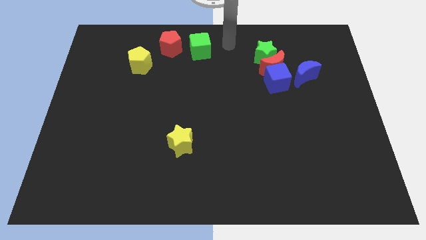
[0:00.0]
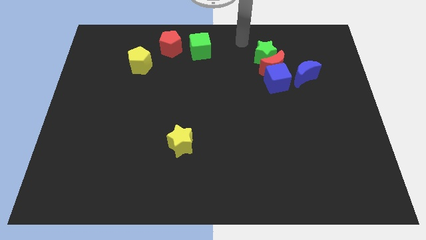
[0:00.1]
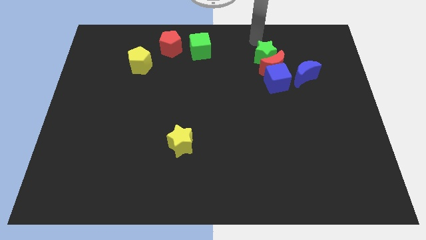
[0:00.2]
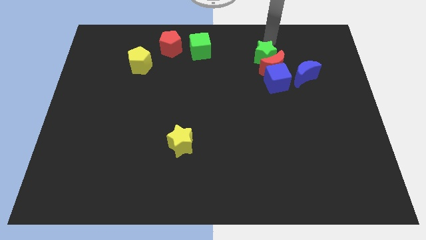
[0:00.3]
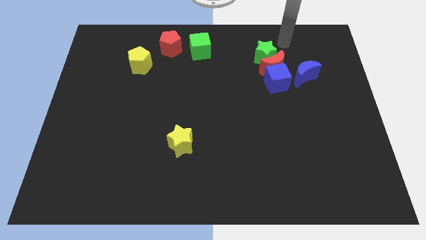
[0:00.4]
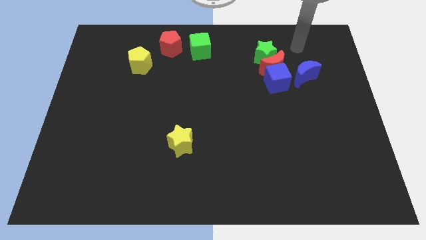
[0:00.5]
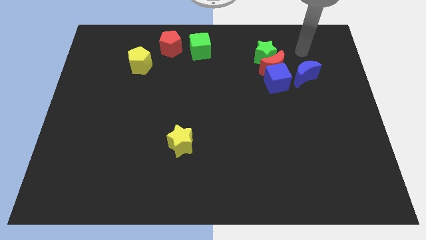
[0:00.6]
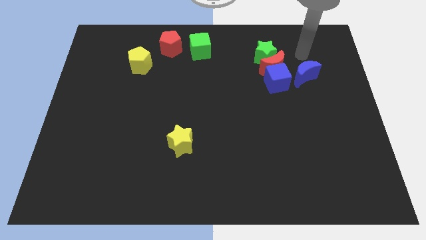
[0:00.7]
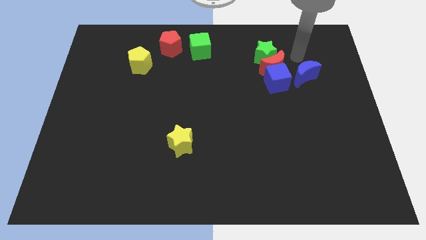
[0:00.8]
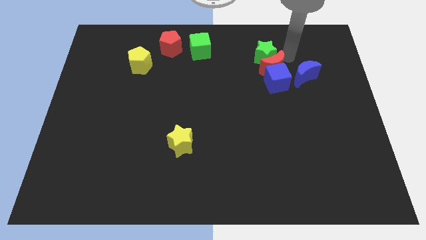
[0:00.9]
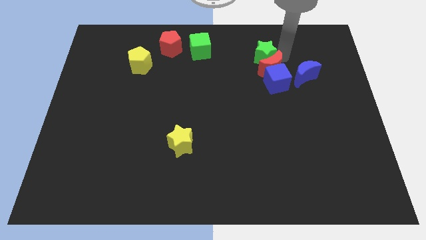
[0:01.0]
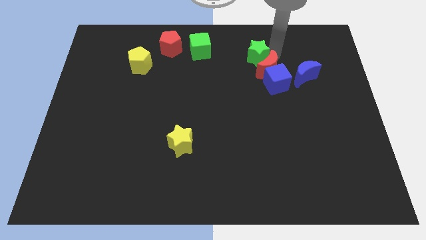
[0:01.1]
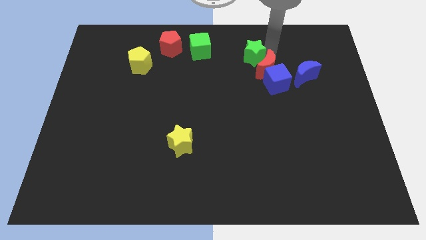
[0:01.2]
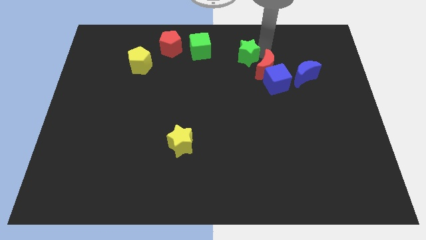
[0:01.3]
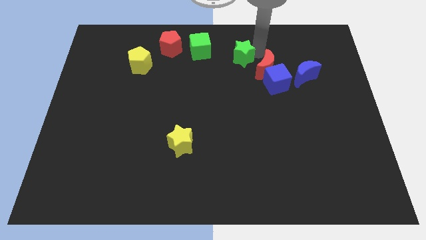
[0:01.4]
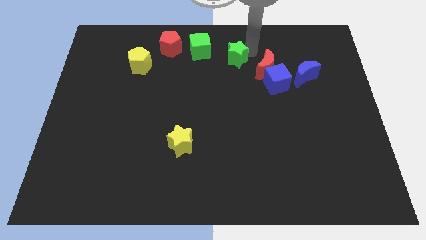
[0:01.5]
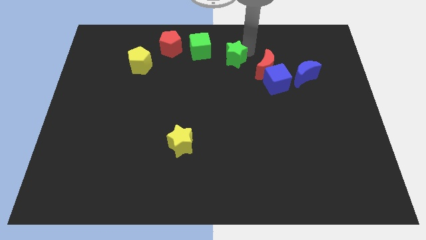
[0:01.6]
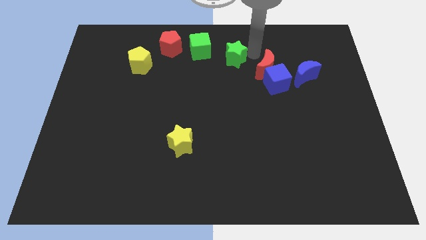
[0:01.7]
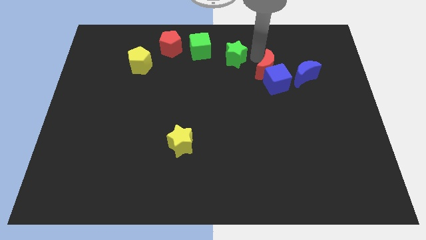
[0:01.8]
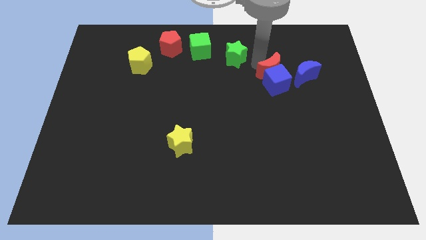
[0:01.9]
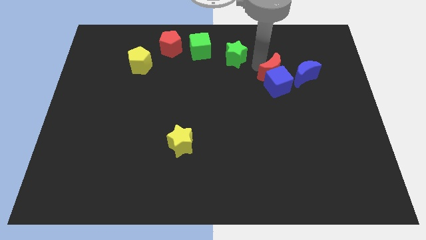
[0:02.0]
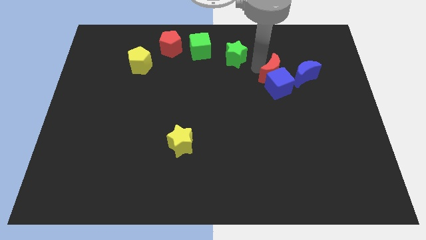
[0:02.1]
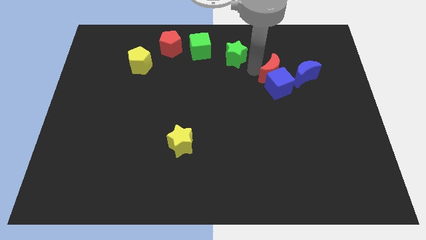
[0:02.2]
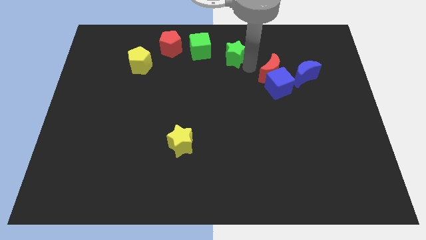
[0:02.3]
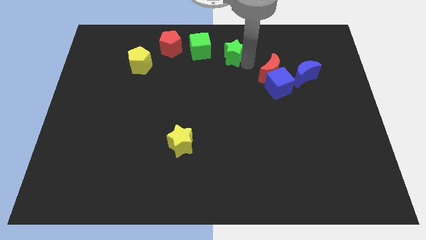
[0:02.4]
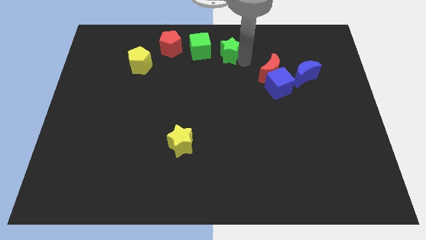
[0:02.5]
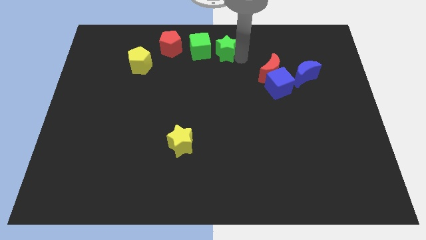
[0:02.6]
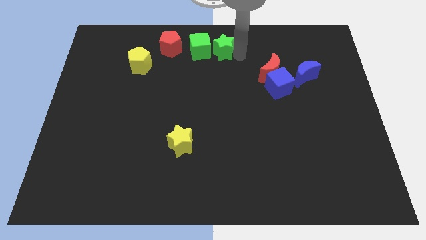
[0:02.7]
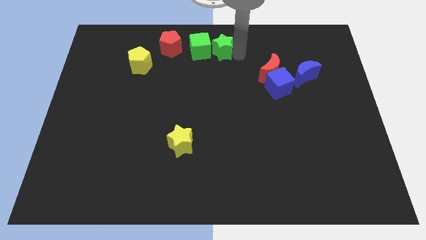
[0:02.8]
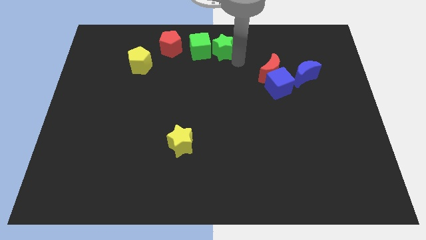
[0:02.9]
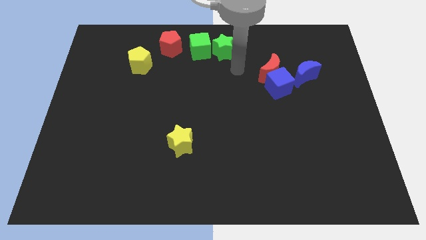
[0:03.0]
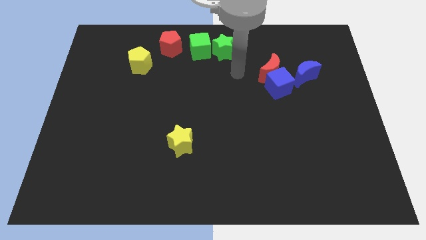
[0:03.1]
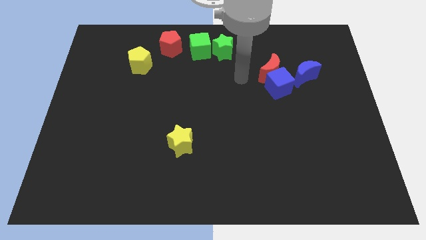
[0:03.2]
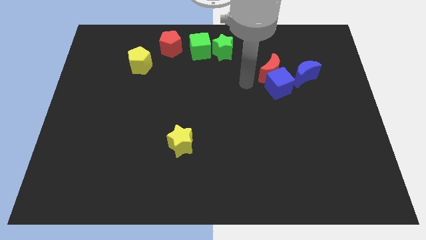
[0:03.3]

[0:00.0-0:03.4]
push the green star parallel right to the green cube

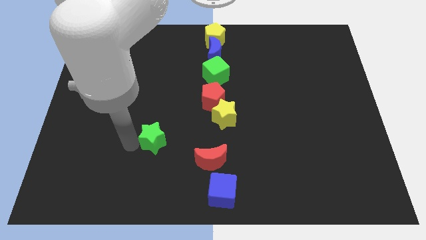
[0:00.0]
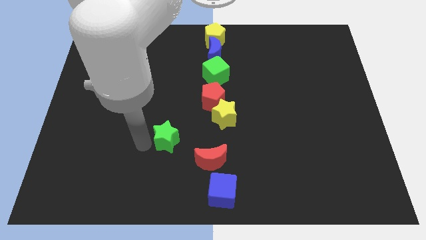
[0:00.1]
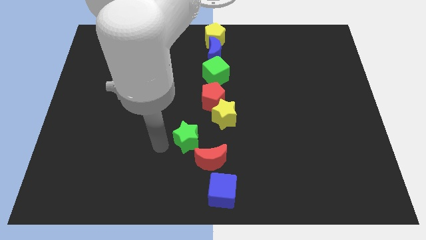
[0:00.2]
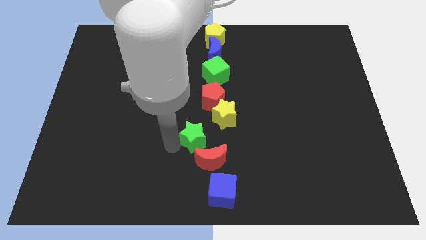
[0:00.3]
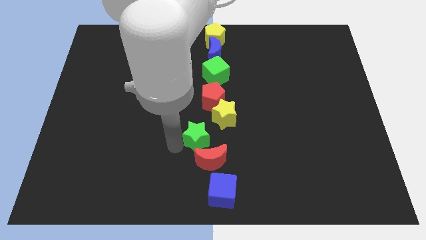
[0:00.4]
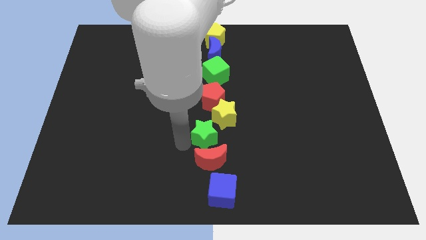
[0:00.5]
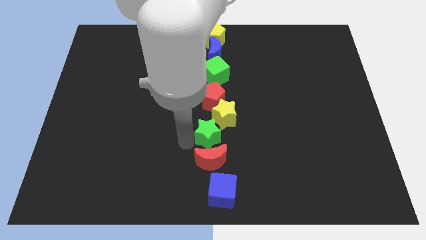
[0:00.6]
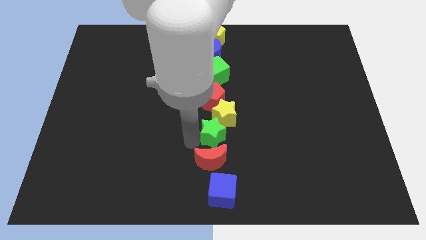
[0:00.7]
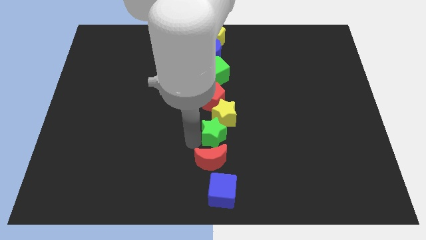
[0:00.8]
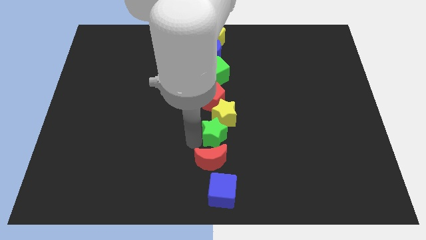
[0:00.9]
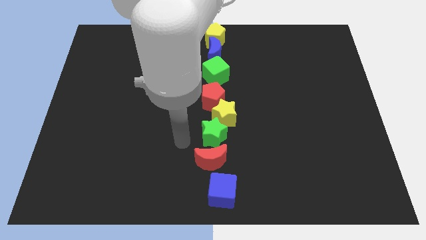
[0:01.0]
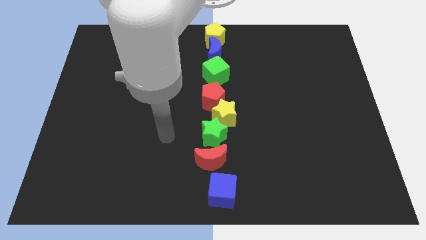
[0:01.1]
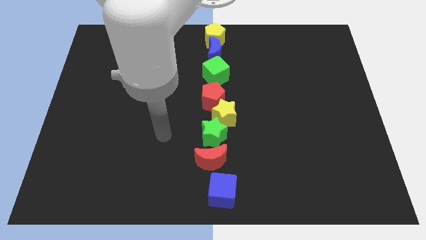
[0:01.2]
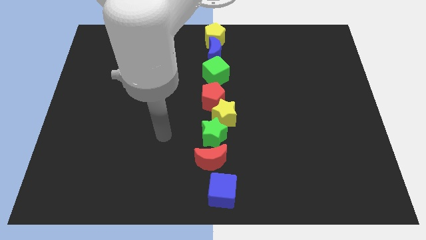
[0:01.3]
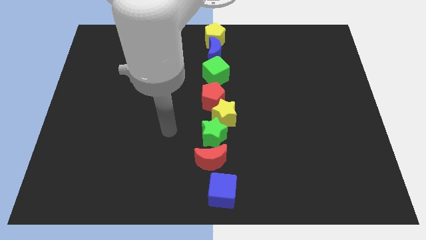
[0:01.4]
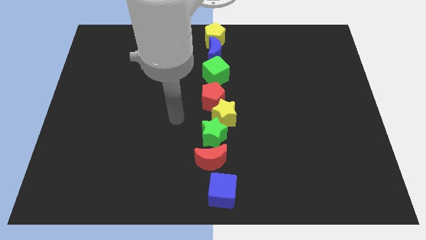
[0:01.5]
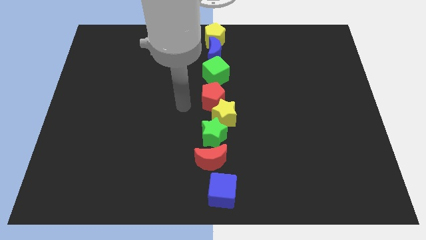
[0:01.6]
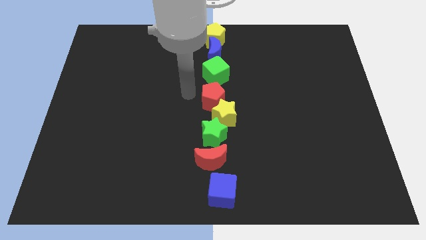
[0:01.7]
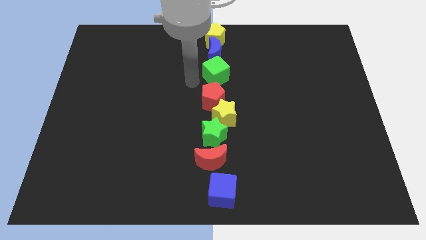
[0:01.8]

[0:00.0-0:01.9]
place the green star top side of the red moon

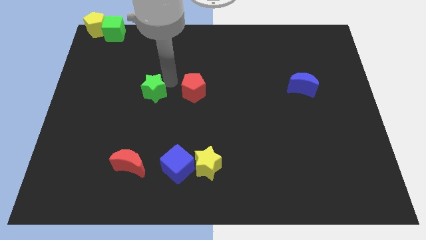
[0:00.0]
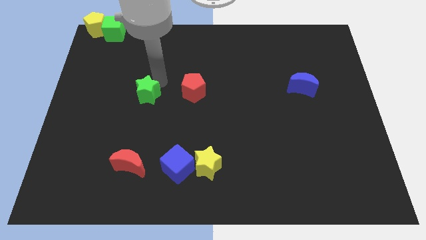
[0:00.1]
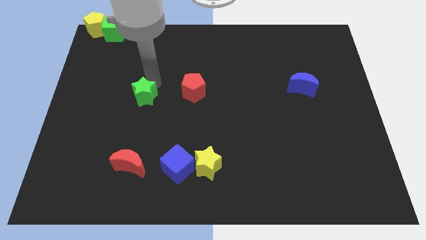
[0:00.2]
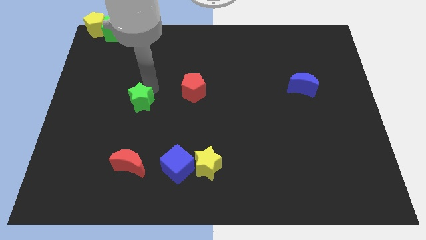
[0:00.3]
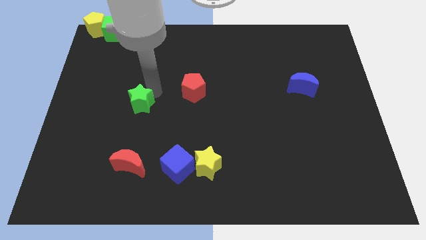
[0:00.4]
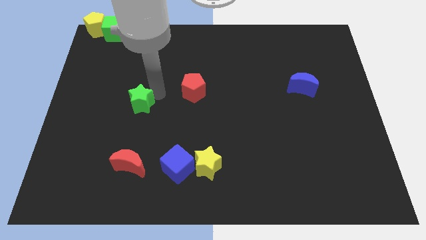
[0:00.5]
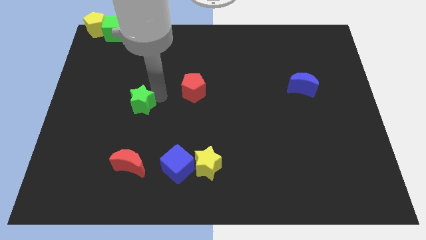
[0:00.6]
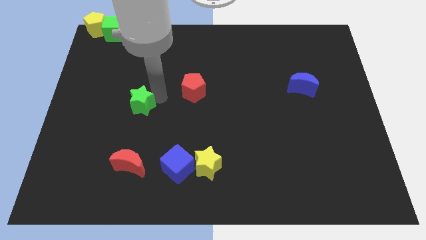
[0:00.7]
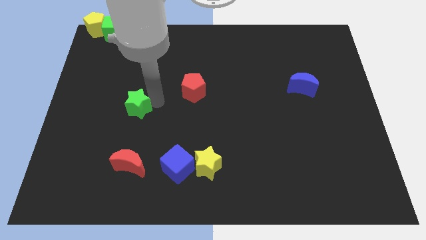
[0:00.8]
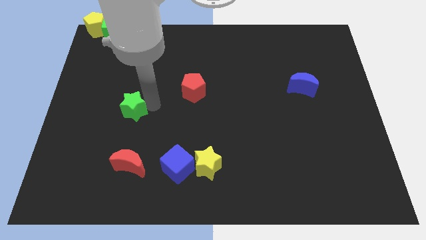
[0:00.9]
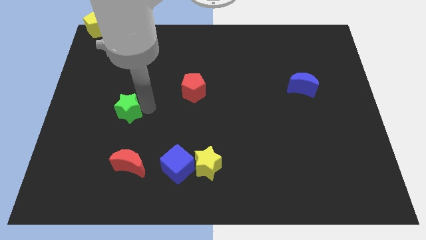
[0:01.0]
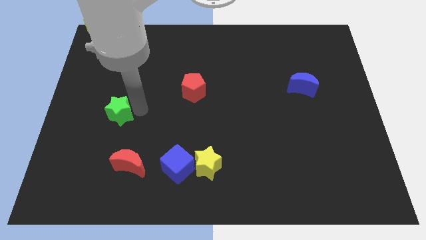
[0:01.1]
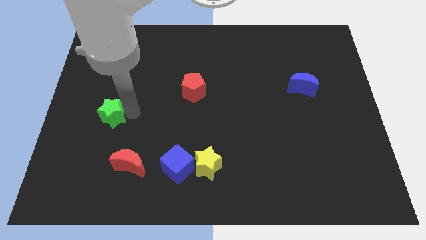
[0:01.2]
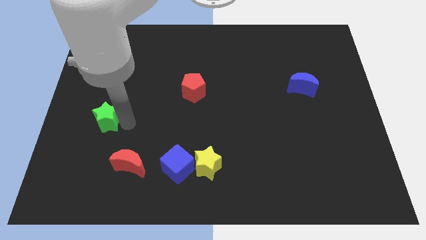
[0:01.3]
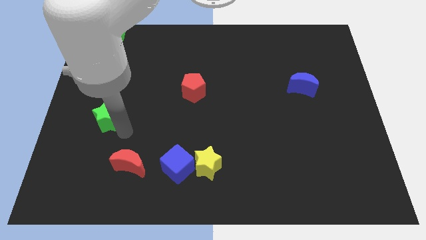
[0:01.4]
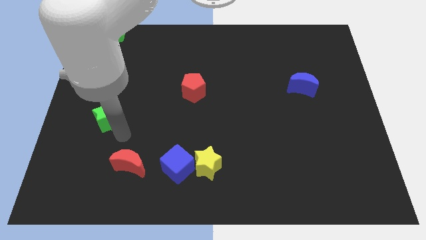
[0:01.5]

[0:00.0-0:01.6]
move the green star diagonal above the red moon

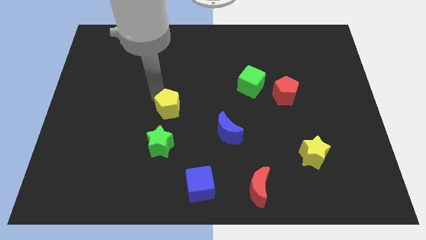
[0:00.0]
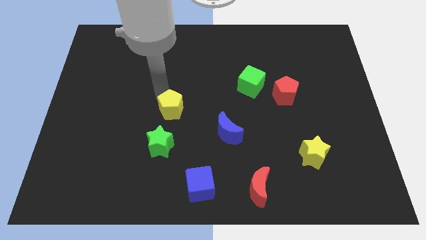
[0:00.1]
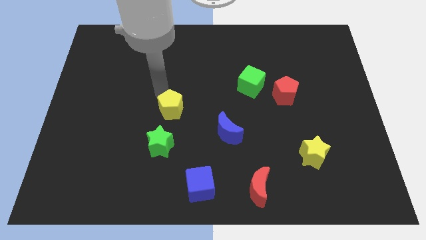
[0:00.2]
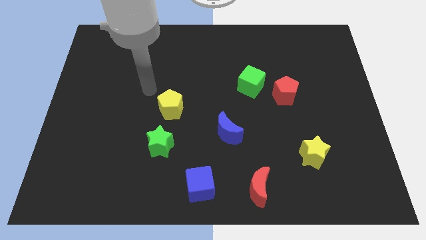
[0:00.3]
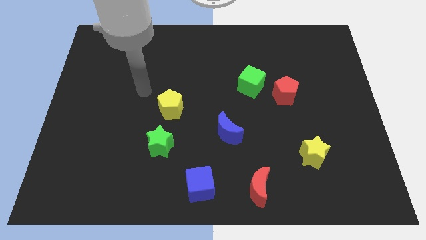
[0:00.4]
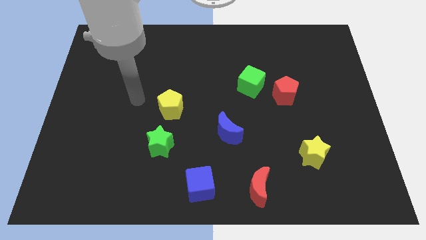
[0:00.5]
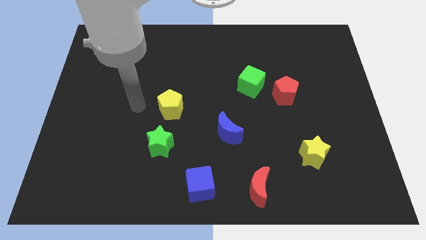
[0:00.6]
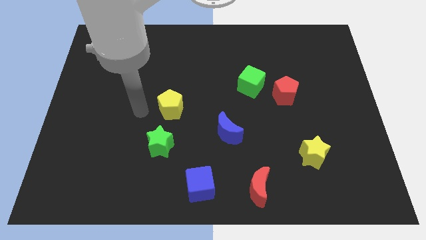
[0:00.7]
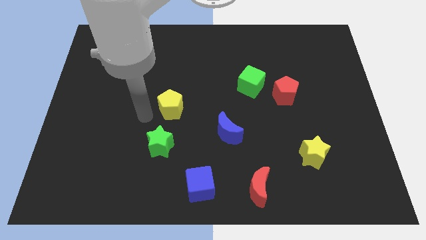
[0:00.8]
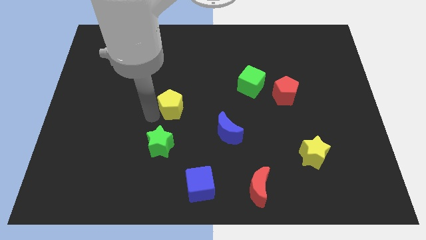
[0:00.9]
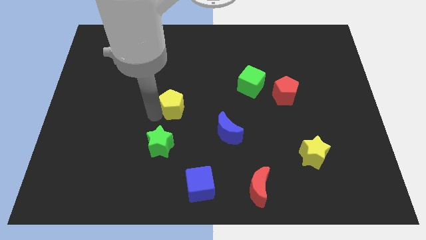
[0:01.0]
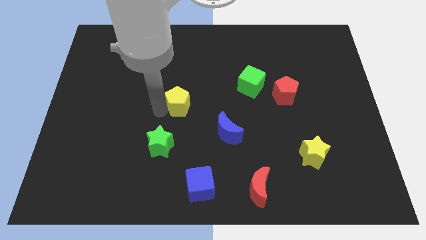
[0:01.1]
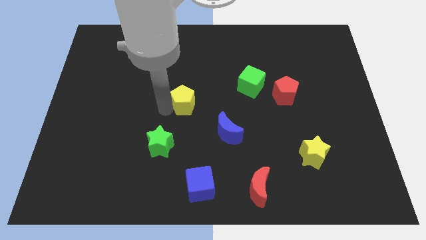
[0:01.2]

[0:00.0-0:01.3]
slightly adjust the yellow pentagon to form a triangle with green star and blue moon

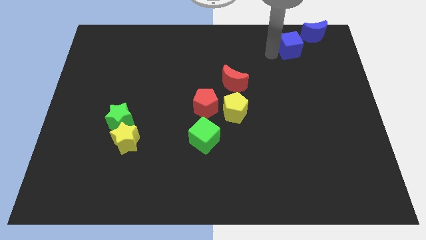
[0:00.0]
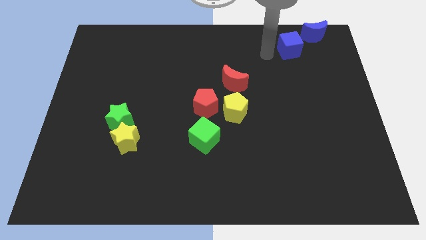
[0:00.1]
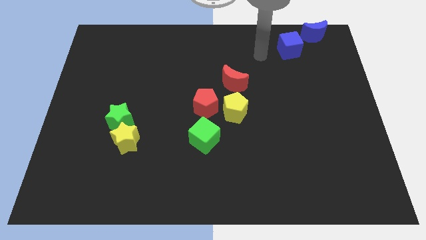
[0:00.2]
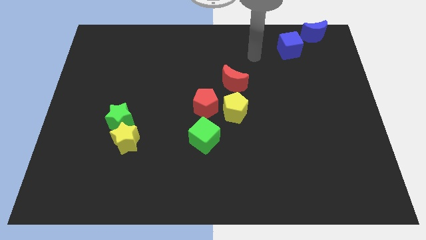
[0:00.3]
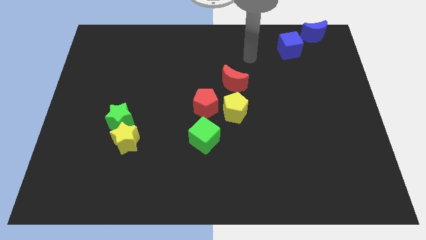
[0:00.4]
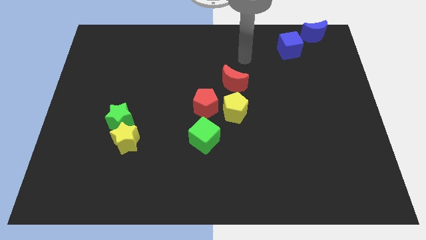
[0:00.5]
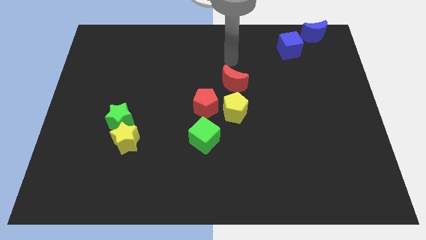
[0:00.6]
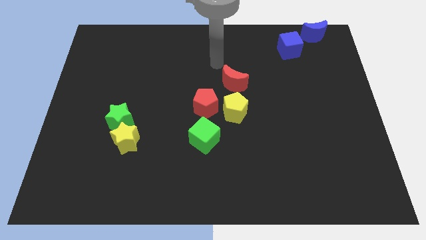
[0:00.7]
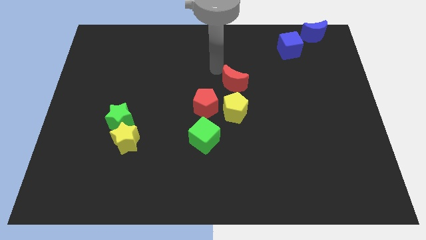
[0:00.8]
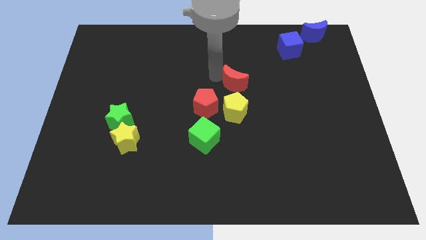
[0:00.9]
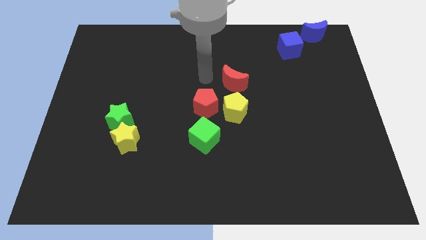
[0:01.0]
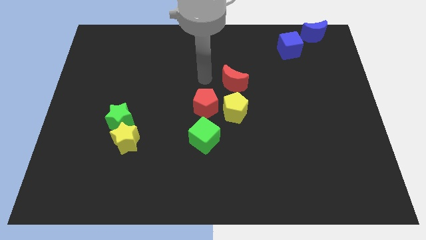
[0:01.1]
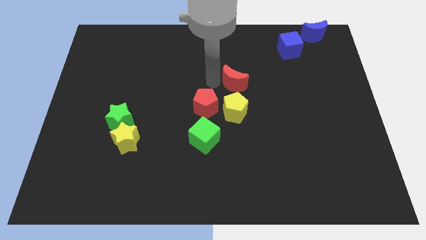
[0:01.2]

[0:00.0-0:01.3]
place your arm to the left side of red moon
